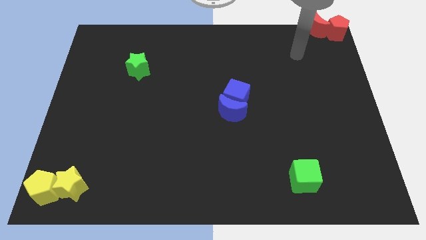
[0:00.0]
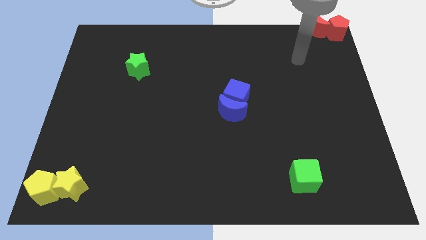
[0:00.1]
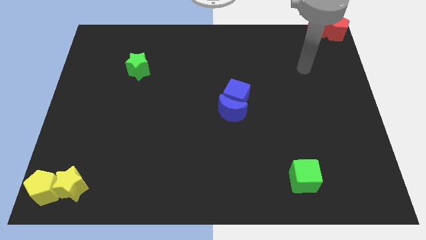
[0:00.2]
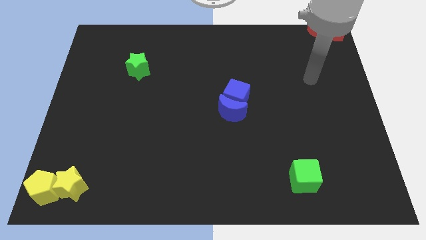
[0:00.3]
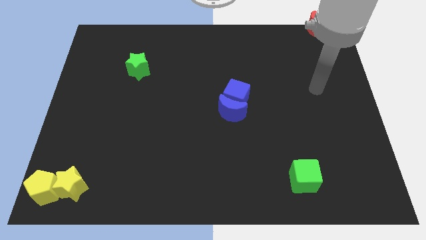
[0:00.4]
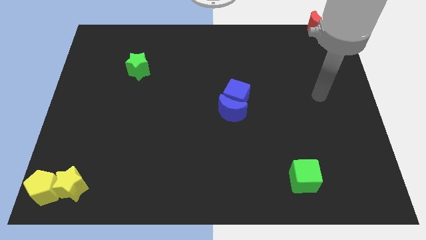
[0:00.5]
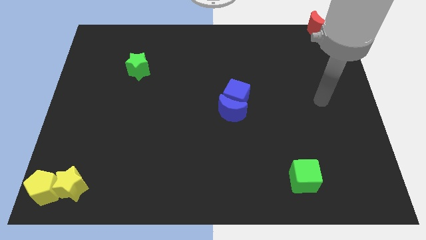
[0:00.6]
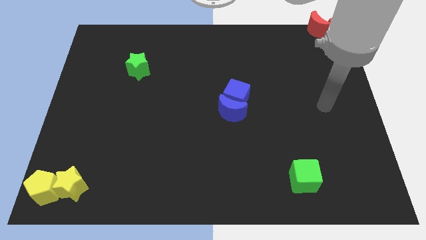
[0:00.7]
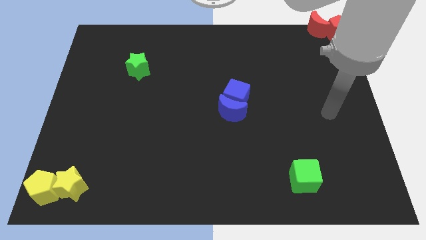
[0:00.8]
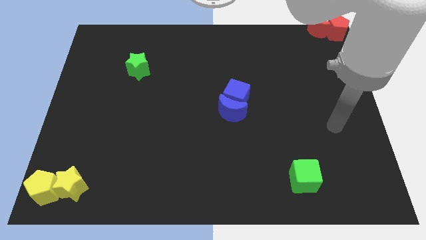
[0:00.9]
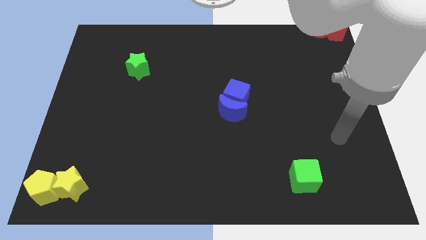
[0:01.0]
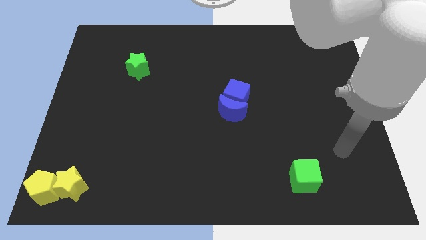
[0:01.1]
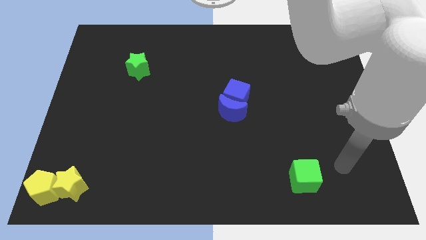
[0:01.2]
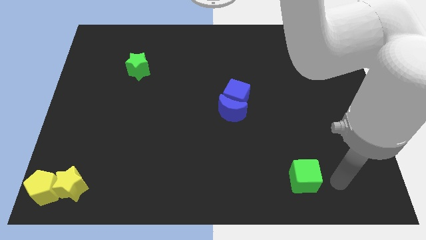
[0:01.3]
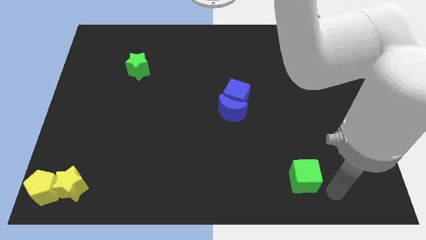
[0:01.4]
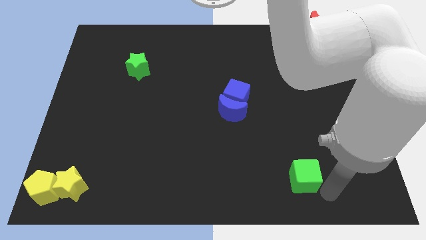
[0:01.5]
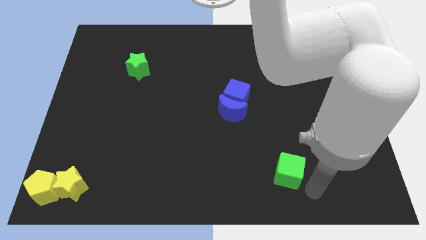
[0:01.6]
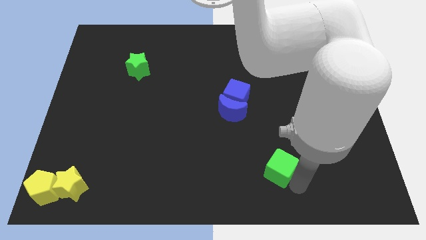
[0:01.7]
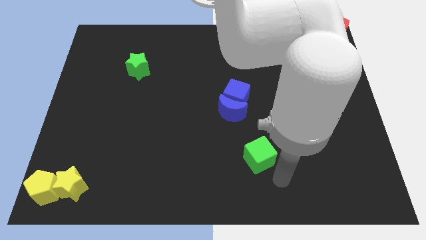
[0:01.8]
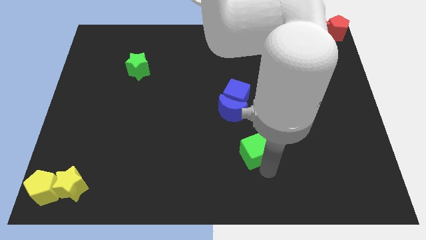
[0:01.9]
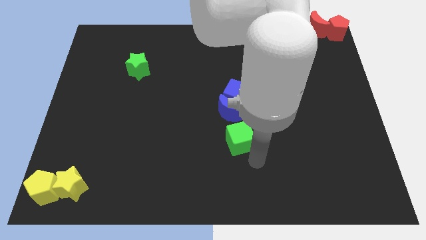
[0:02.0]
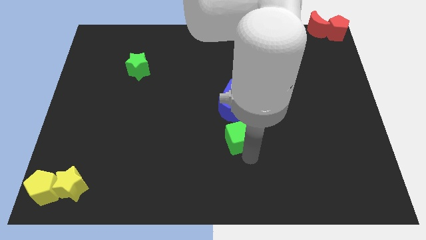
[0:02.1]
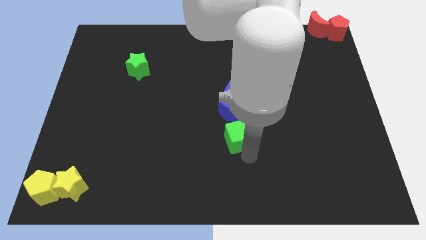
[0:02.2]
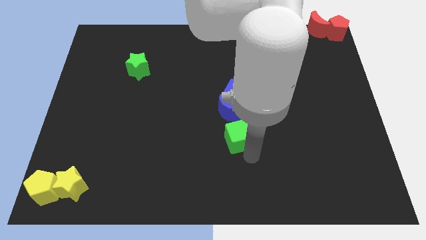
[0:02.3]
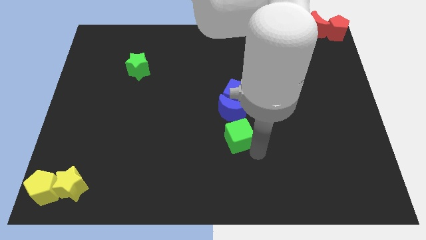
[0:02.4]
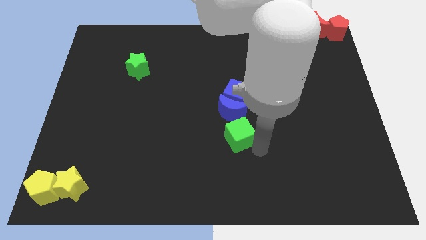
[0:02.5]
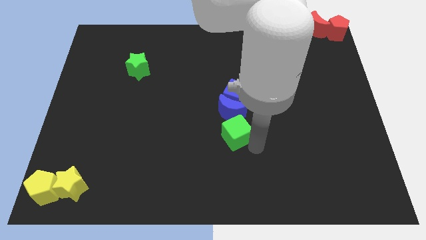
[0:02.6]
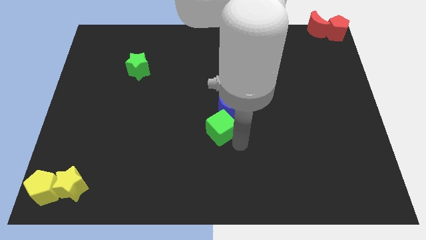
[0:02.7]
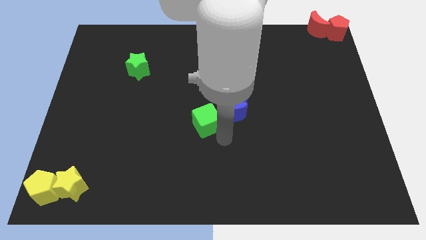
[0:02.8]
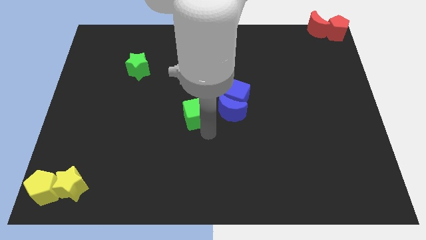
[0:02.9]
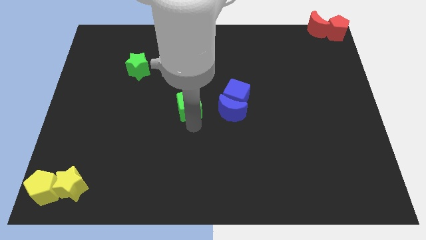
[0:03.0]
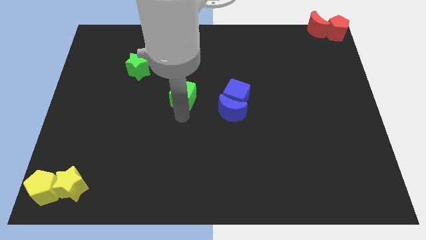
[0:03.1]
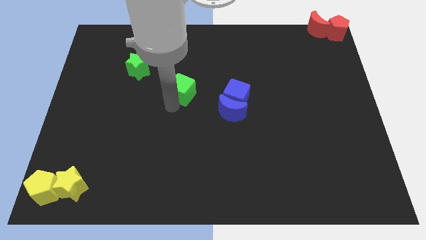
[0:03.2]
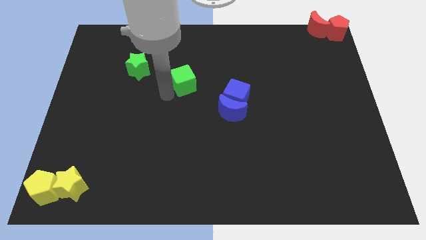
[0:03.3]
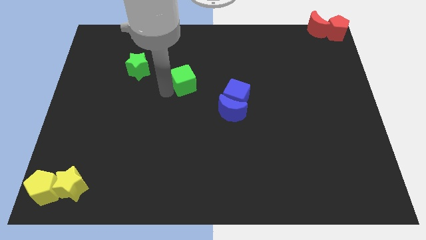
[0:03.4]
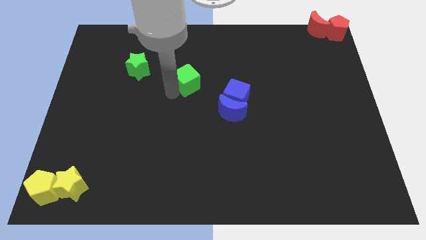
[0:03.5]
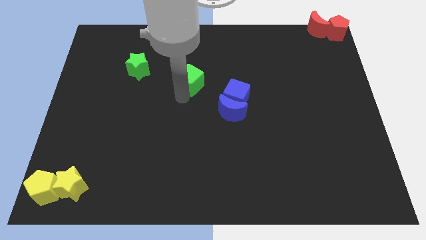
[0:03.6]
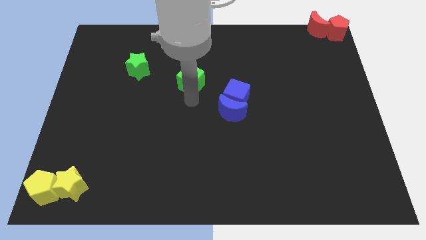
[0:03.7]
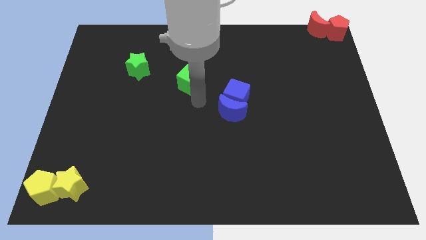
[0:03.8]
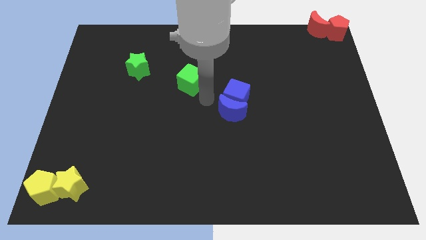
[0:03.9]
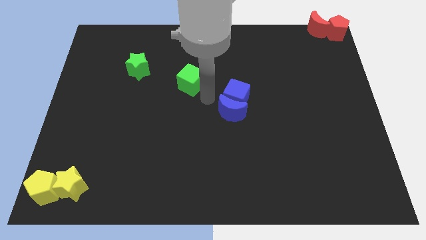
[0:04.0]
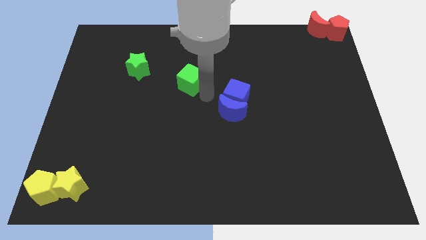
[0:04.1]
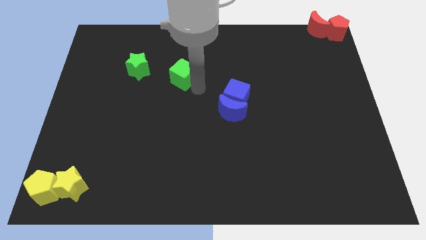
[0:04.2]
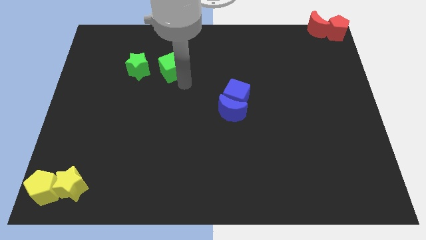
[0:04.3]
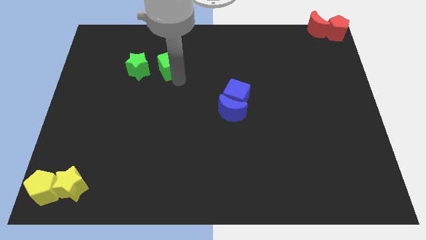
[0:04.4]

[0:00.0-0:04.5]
push the green cube to the right of the green star

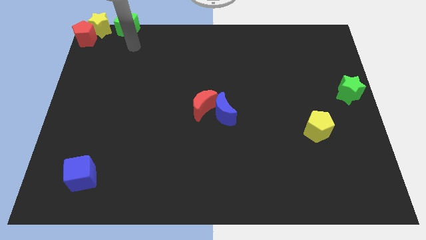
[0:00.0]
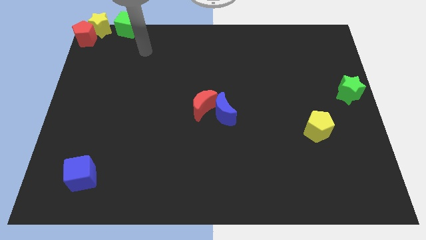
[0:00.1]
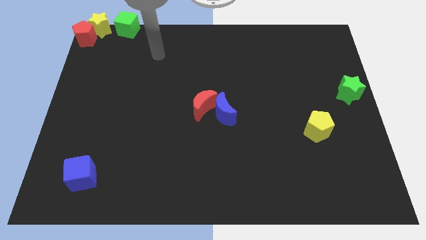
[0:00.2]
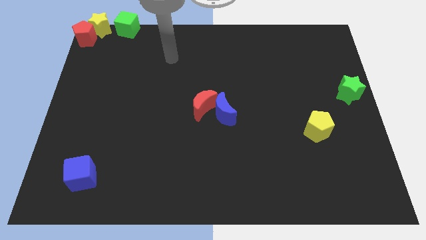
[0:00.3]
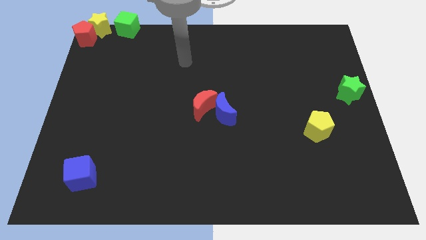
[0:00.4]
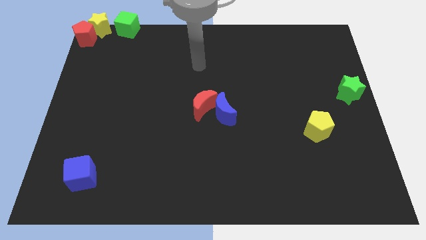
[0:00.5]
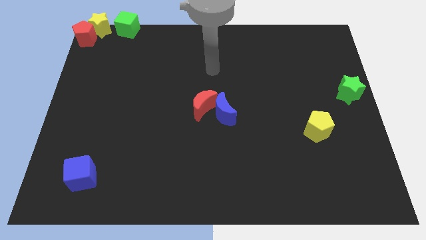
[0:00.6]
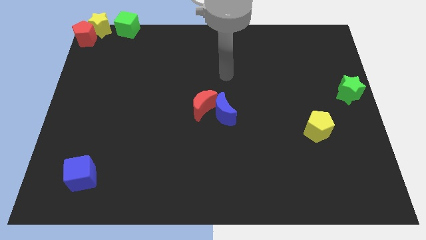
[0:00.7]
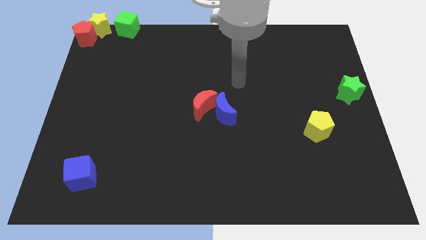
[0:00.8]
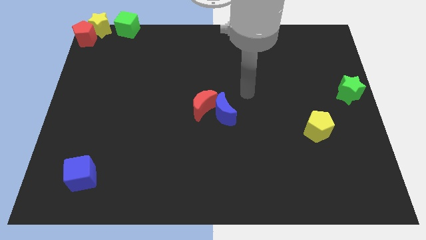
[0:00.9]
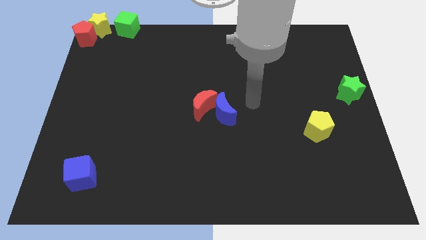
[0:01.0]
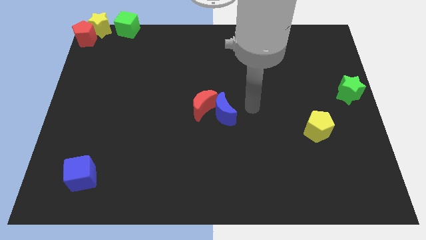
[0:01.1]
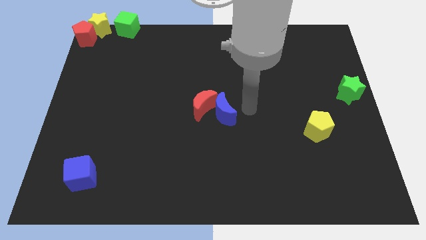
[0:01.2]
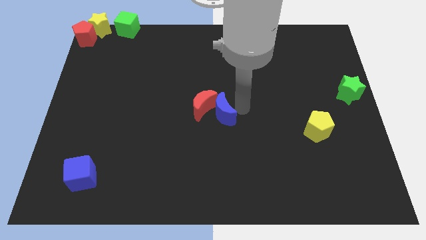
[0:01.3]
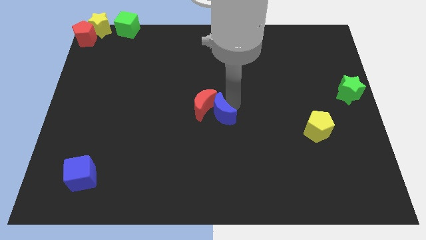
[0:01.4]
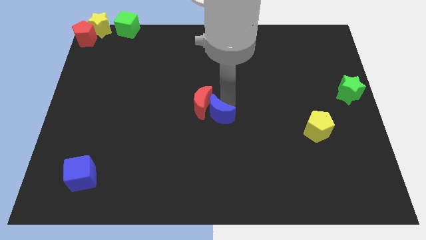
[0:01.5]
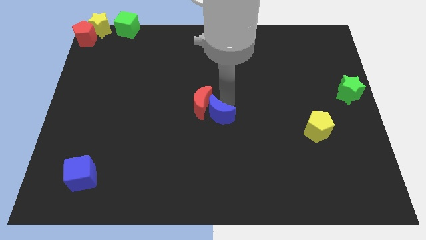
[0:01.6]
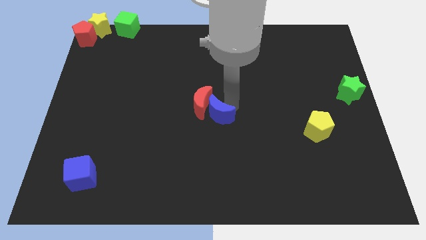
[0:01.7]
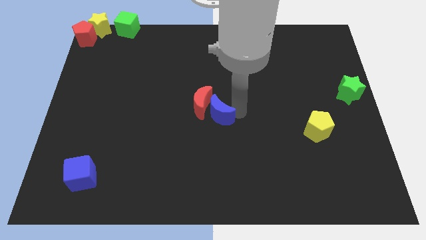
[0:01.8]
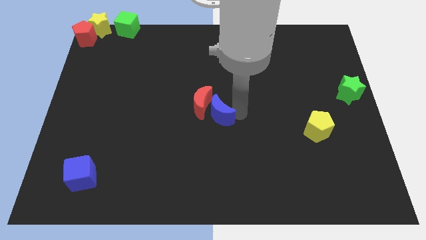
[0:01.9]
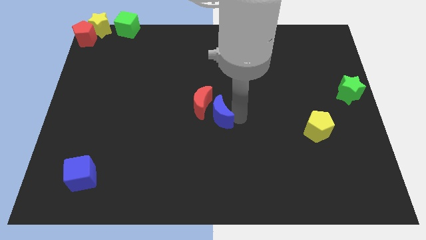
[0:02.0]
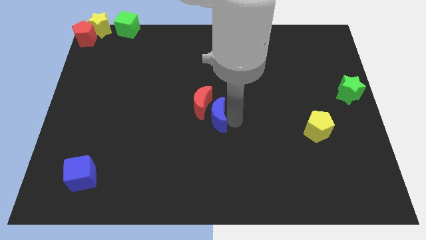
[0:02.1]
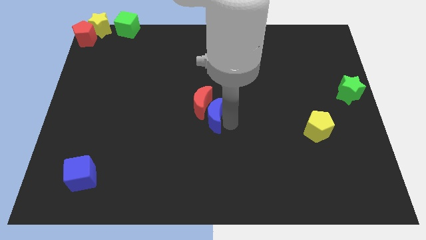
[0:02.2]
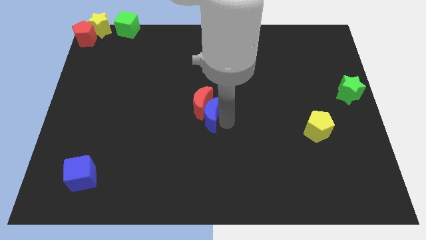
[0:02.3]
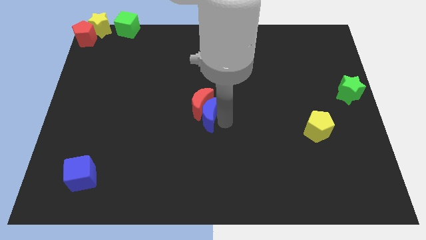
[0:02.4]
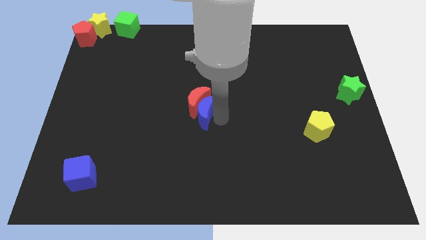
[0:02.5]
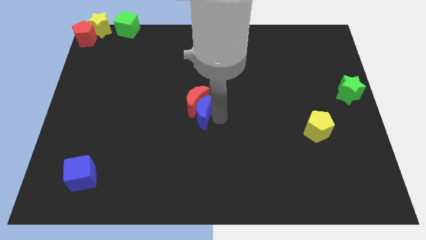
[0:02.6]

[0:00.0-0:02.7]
push the blue moon into red moon

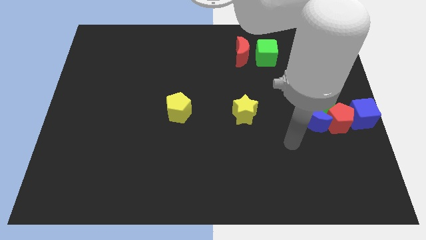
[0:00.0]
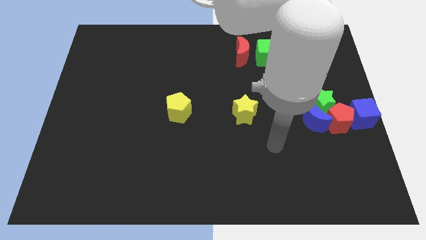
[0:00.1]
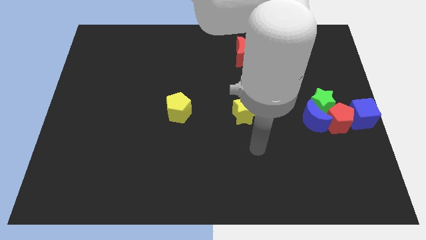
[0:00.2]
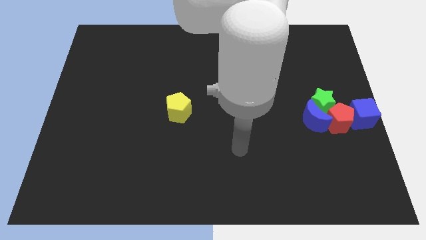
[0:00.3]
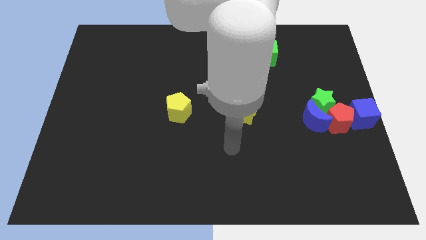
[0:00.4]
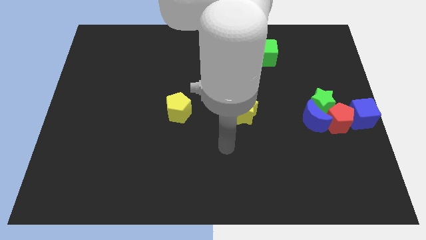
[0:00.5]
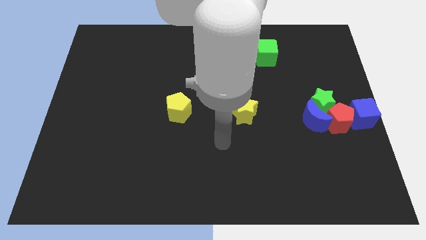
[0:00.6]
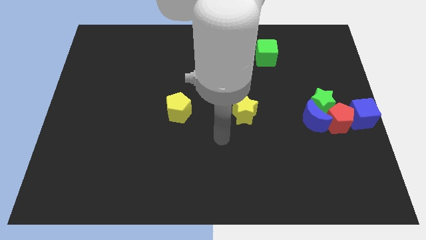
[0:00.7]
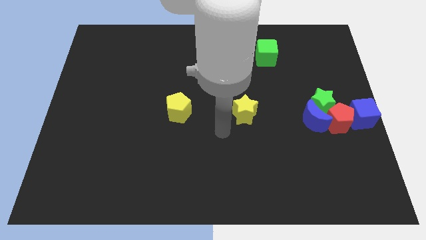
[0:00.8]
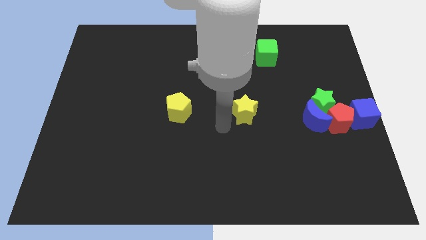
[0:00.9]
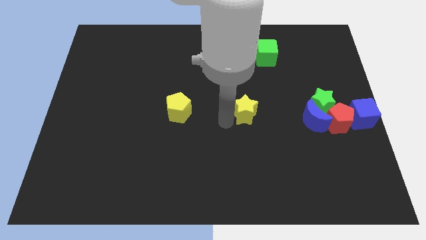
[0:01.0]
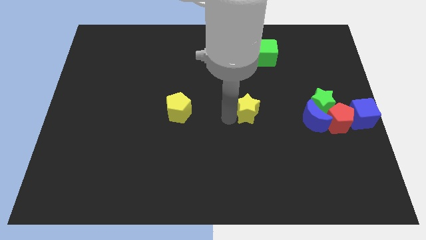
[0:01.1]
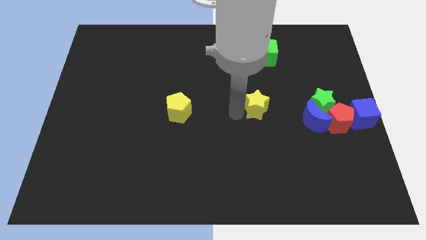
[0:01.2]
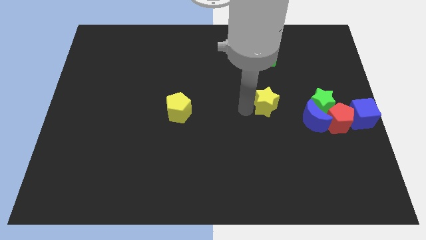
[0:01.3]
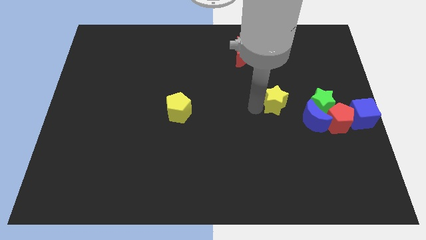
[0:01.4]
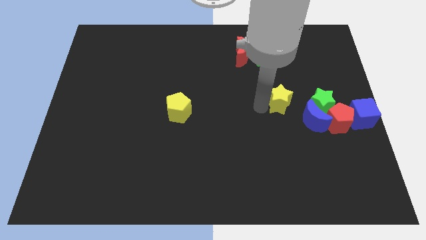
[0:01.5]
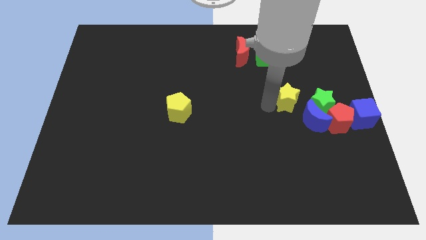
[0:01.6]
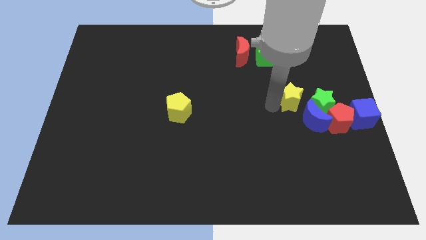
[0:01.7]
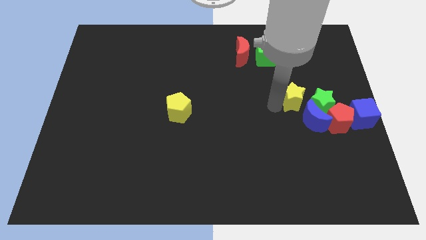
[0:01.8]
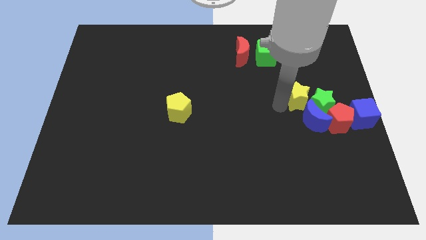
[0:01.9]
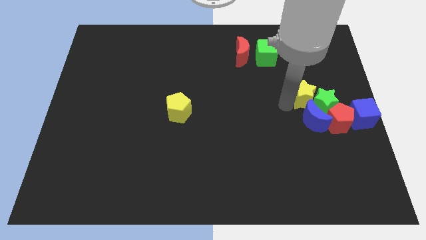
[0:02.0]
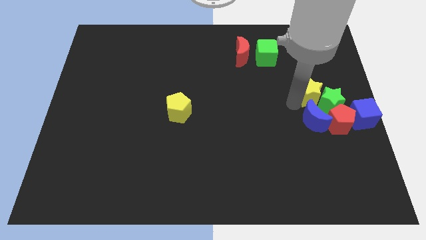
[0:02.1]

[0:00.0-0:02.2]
push yellow star towards the group of blocks
